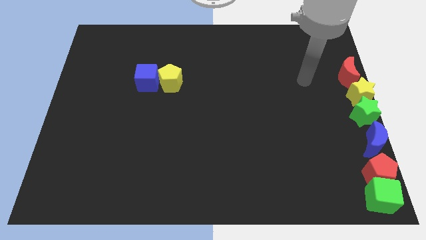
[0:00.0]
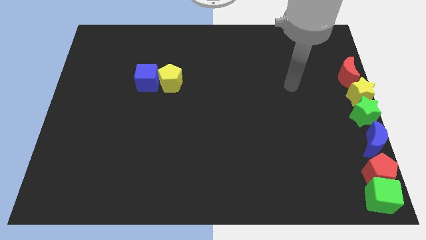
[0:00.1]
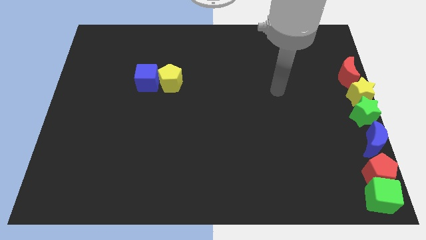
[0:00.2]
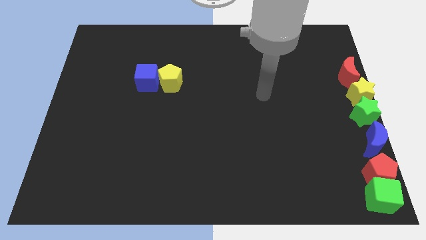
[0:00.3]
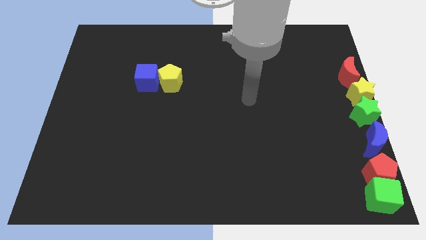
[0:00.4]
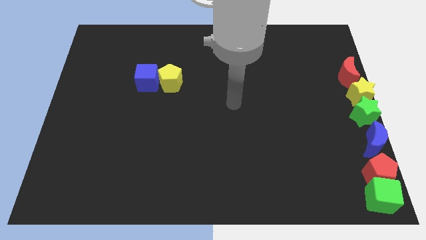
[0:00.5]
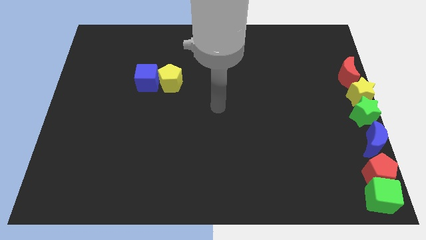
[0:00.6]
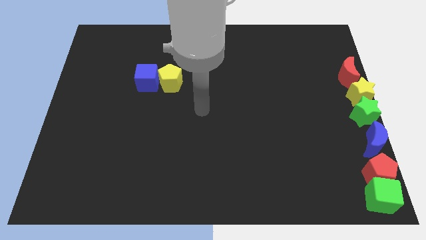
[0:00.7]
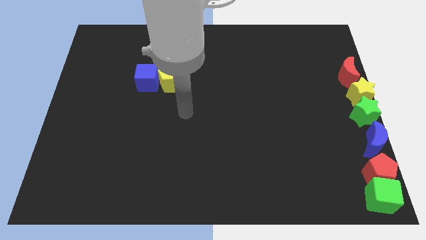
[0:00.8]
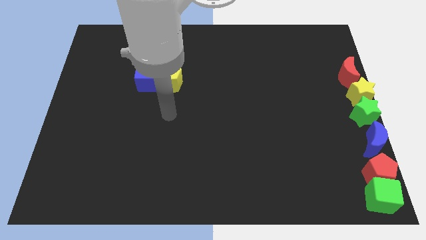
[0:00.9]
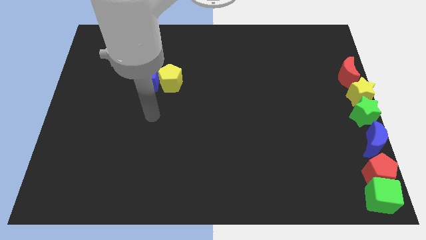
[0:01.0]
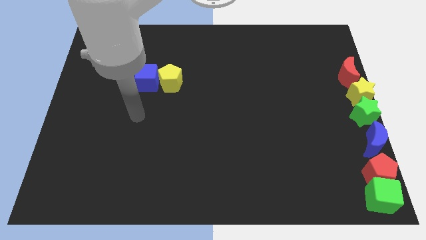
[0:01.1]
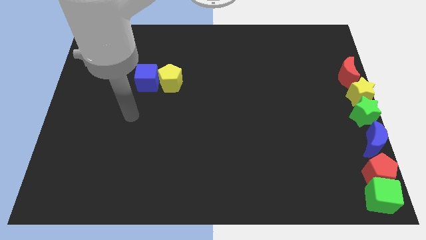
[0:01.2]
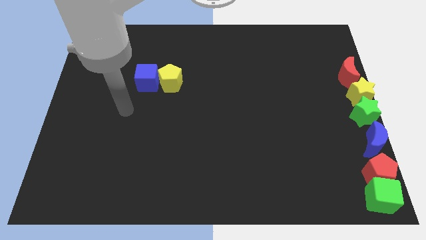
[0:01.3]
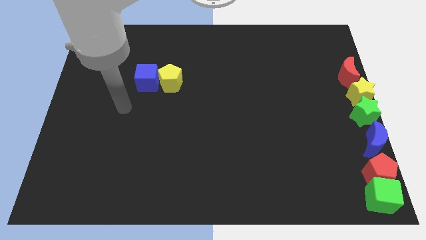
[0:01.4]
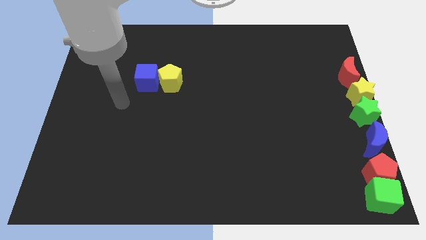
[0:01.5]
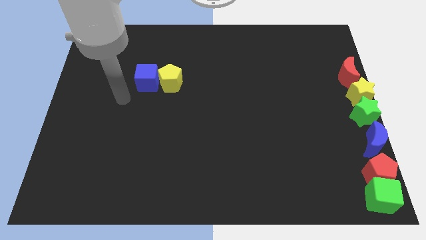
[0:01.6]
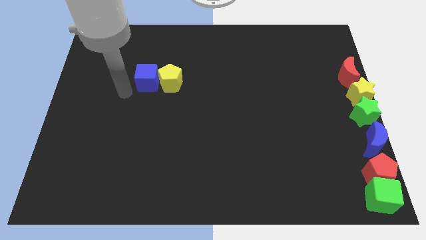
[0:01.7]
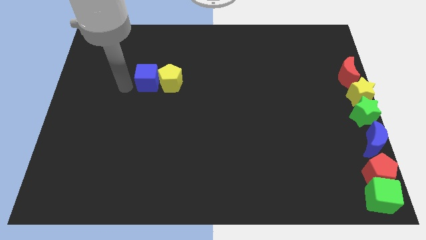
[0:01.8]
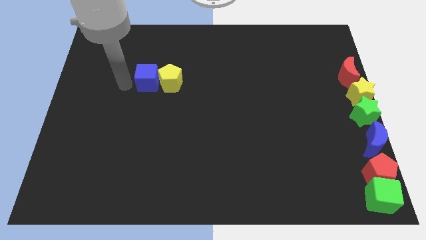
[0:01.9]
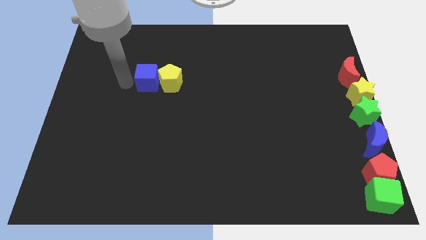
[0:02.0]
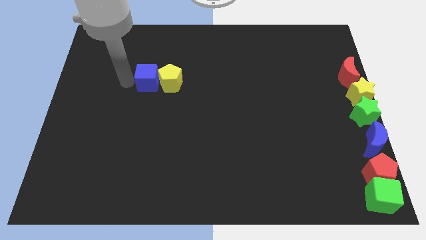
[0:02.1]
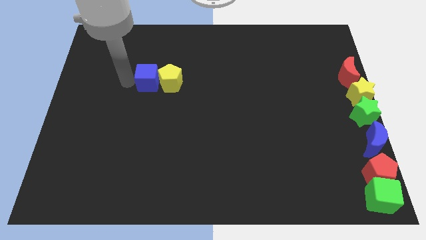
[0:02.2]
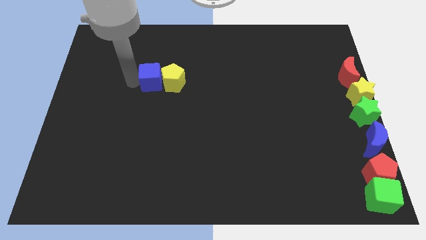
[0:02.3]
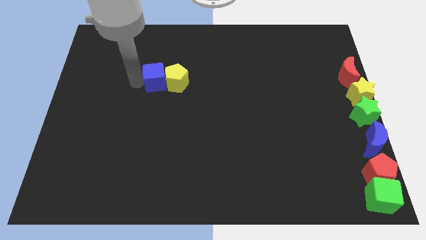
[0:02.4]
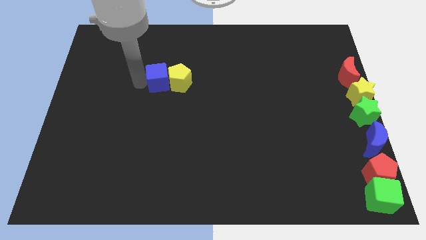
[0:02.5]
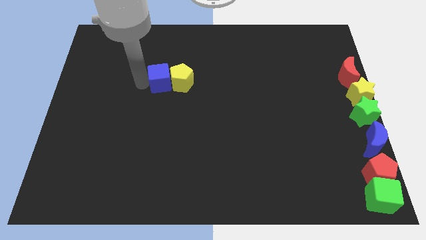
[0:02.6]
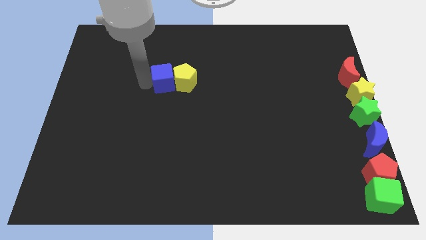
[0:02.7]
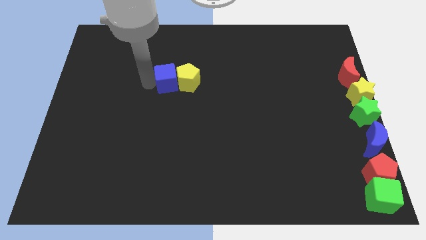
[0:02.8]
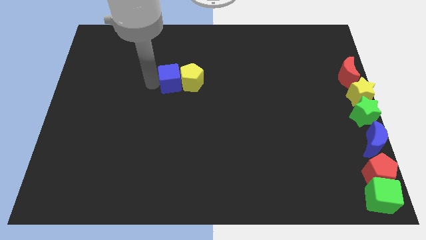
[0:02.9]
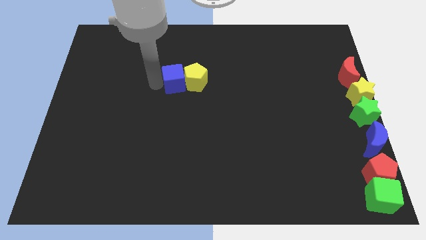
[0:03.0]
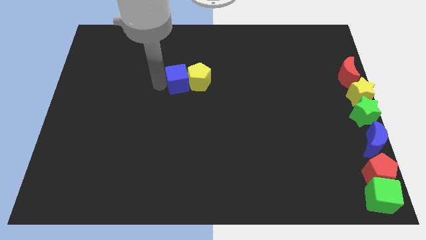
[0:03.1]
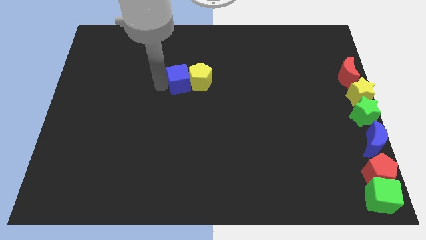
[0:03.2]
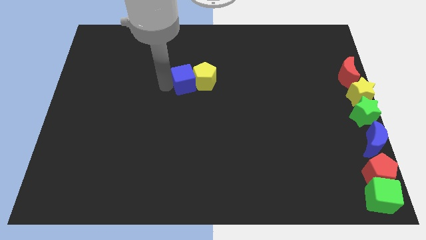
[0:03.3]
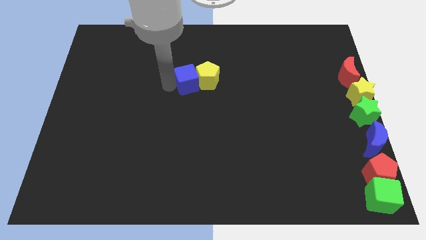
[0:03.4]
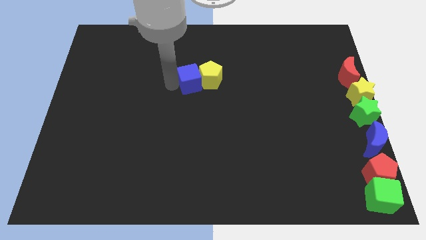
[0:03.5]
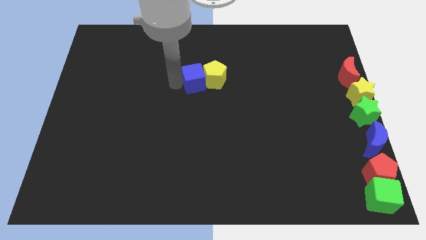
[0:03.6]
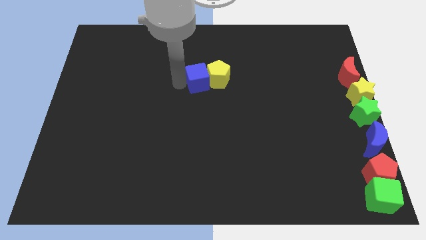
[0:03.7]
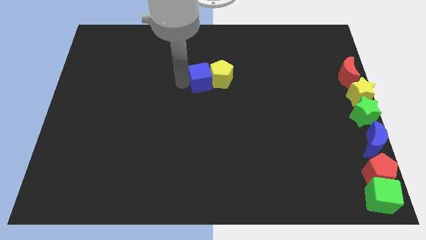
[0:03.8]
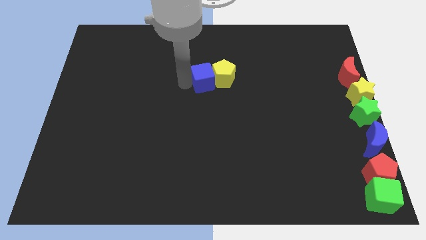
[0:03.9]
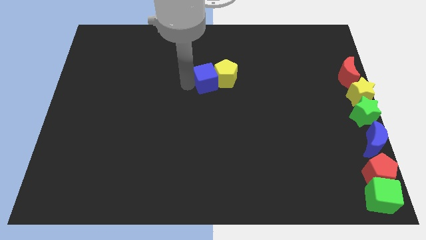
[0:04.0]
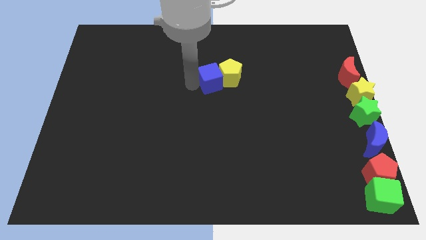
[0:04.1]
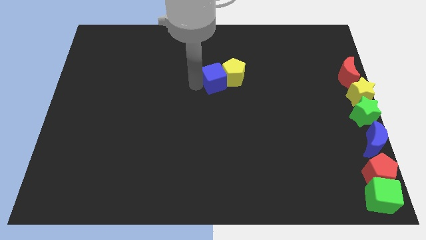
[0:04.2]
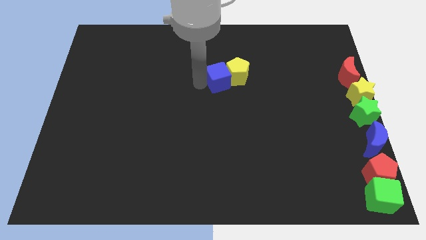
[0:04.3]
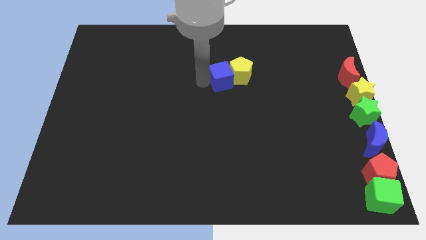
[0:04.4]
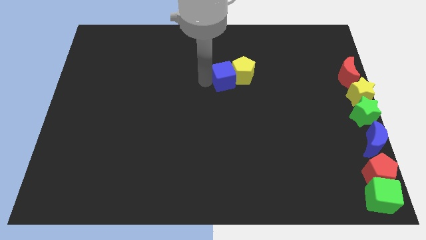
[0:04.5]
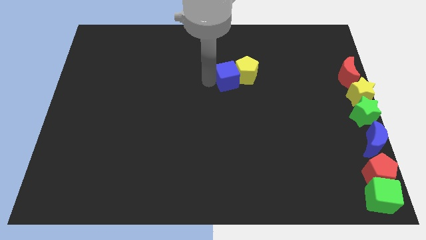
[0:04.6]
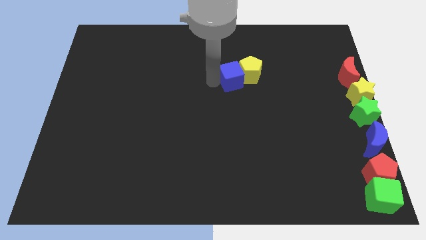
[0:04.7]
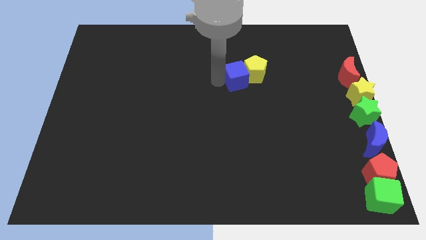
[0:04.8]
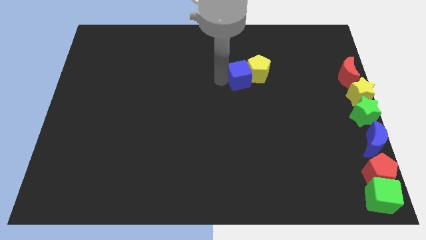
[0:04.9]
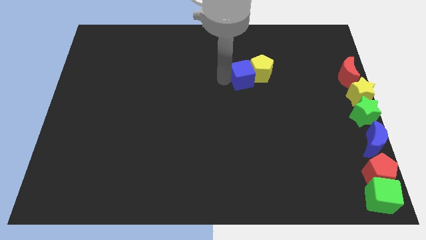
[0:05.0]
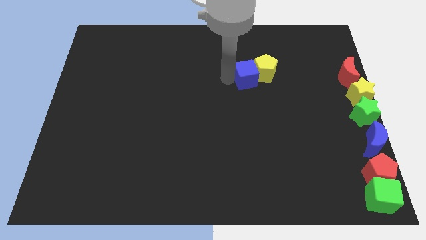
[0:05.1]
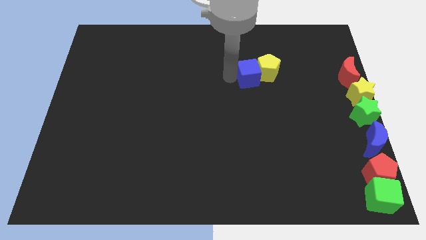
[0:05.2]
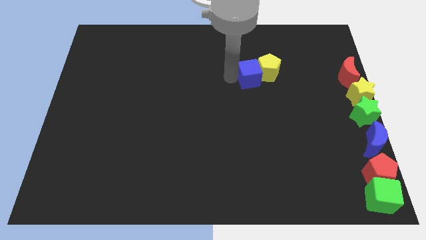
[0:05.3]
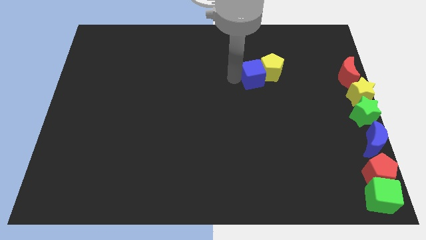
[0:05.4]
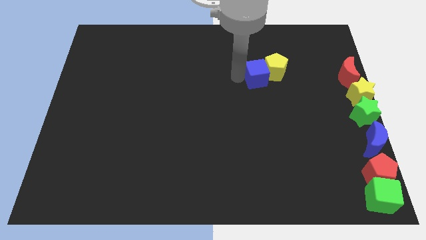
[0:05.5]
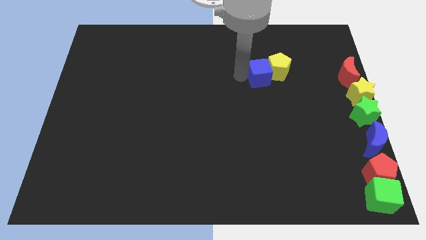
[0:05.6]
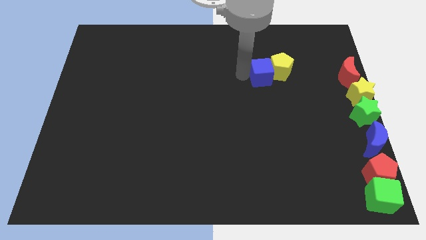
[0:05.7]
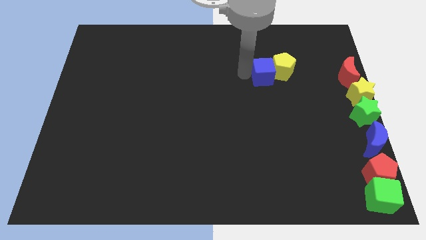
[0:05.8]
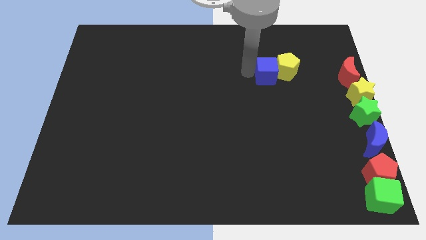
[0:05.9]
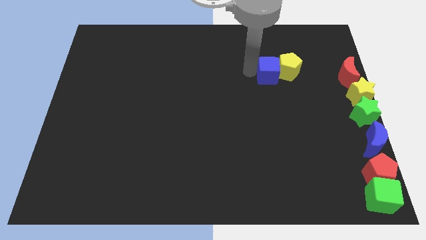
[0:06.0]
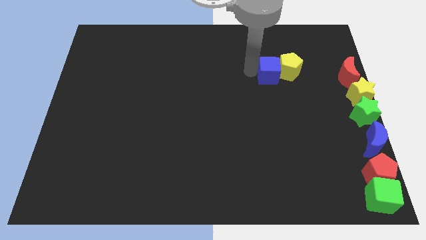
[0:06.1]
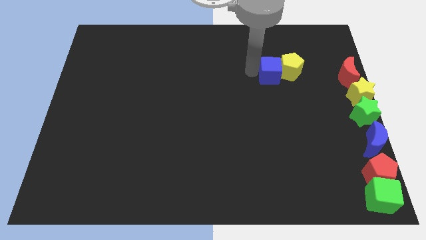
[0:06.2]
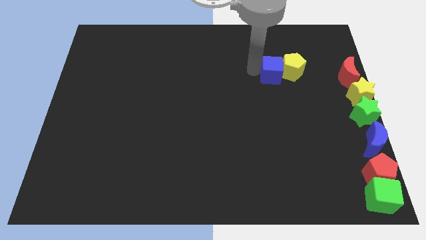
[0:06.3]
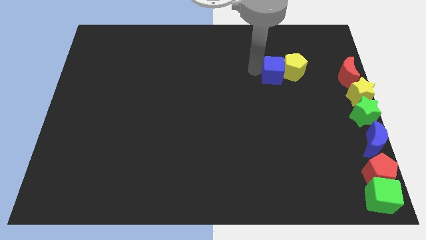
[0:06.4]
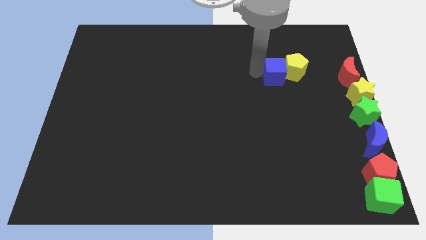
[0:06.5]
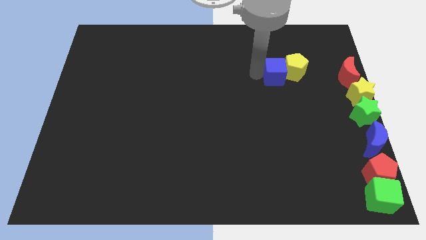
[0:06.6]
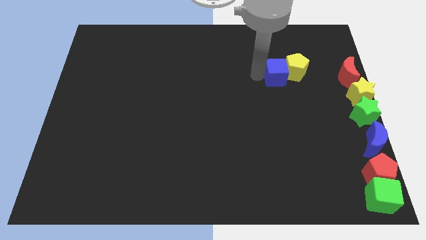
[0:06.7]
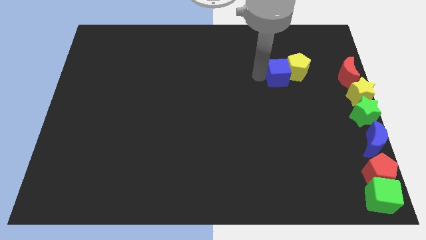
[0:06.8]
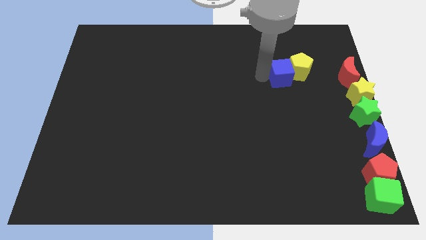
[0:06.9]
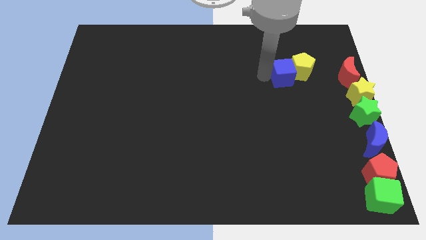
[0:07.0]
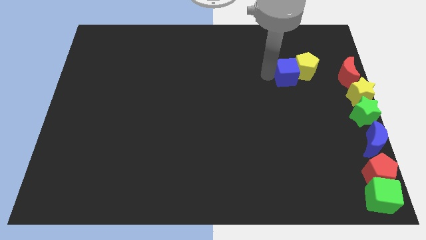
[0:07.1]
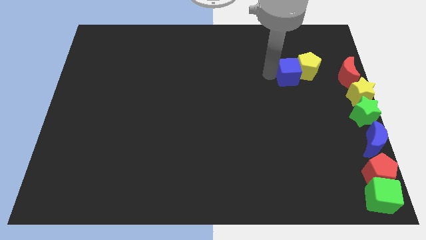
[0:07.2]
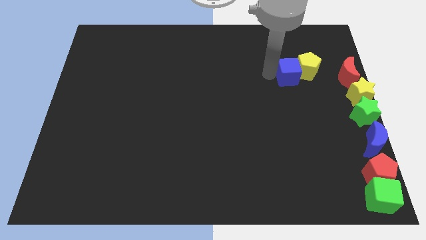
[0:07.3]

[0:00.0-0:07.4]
push blue cube along with the yellow pentagon to the left of red moon

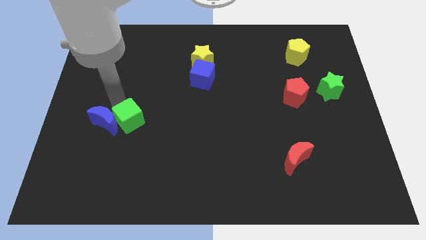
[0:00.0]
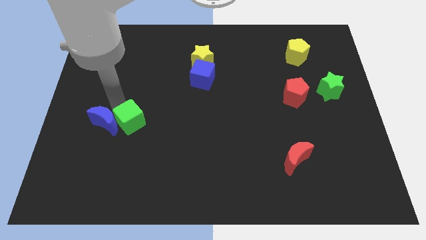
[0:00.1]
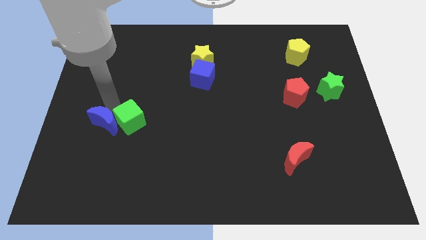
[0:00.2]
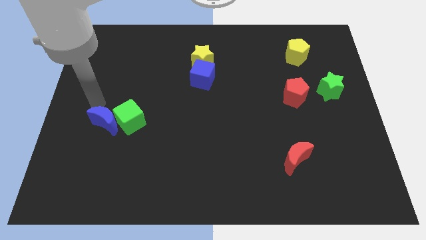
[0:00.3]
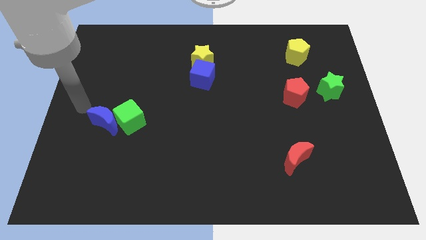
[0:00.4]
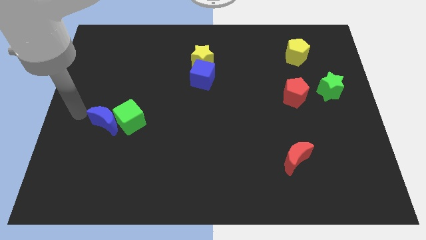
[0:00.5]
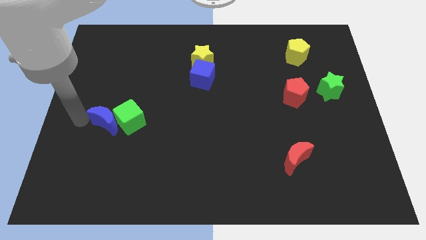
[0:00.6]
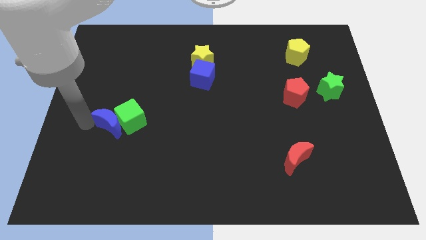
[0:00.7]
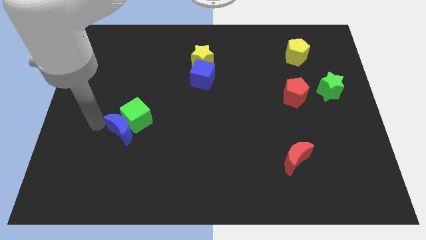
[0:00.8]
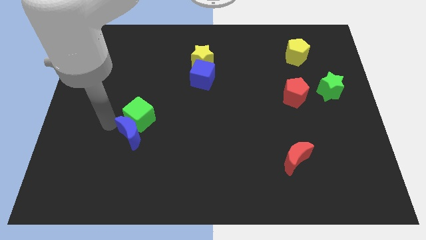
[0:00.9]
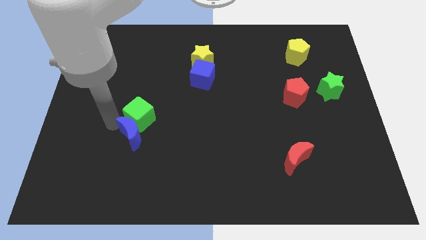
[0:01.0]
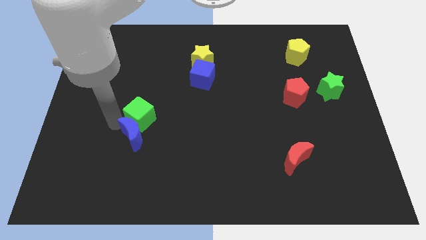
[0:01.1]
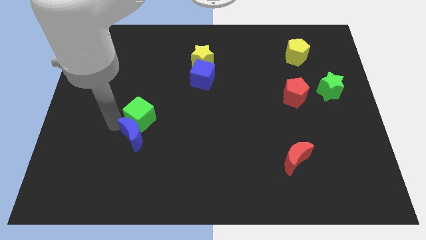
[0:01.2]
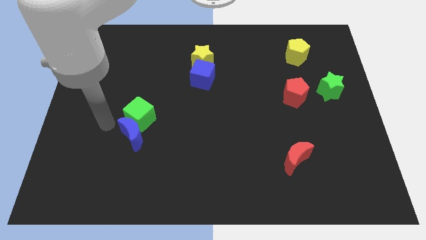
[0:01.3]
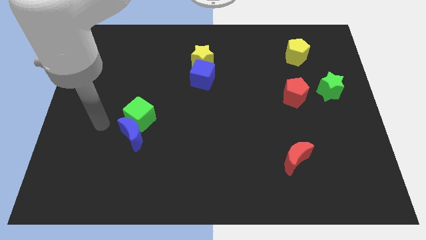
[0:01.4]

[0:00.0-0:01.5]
place blue moon to the bottom of the green cube
